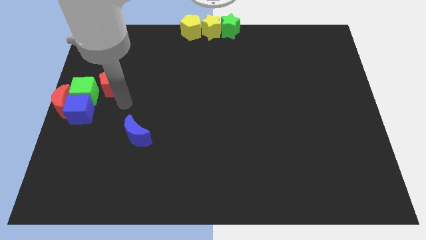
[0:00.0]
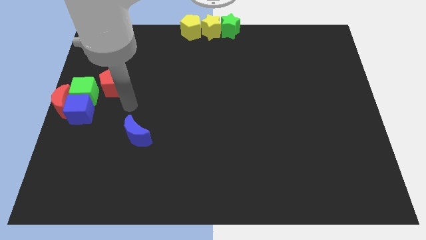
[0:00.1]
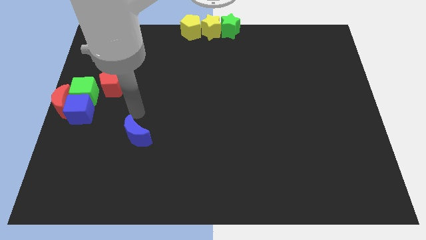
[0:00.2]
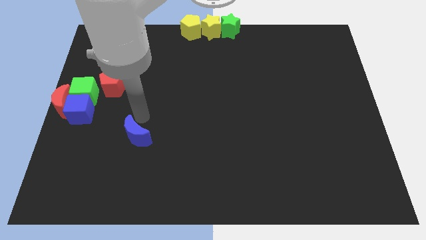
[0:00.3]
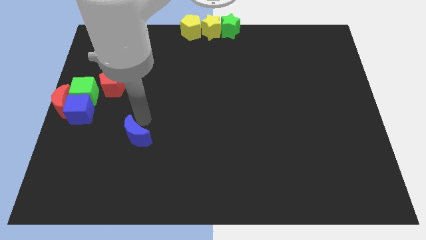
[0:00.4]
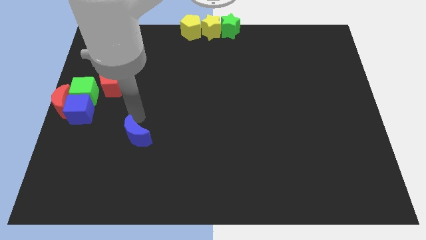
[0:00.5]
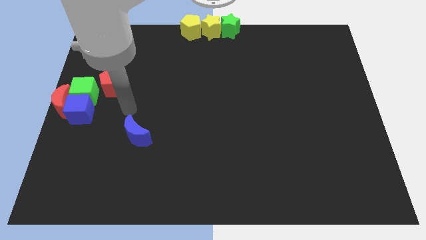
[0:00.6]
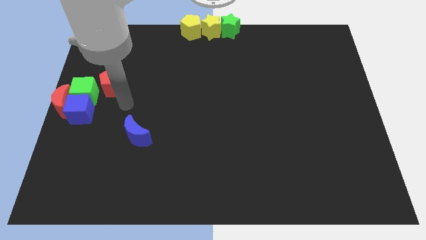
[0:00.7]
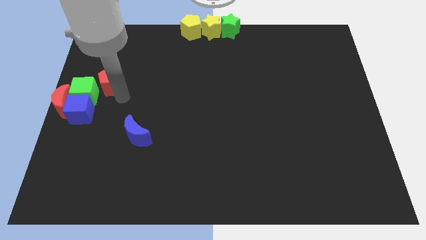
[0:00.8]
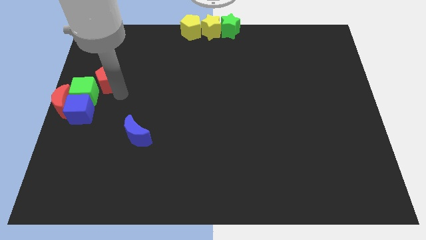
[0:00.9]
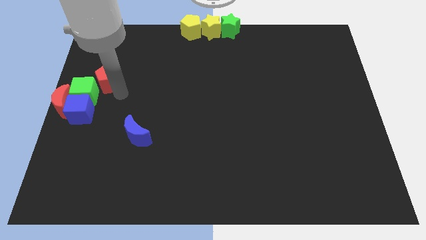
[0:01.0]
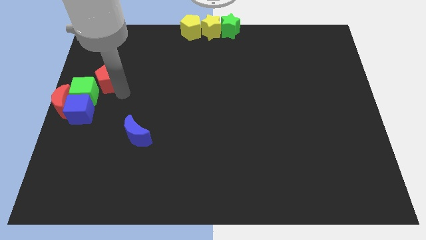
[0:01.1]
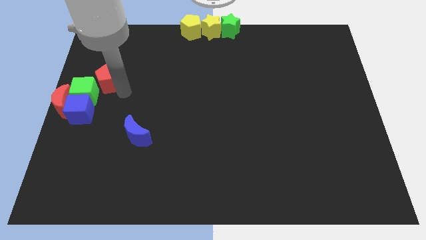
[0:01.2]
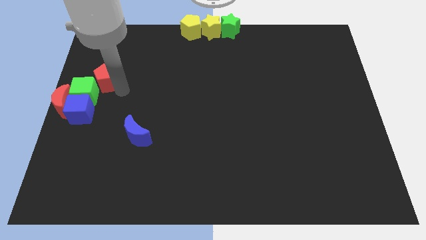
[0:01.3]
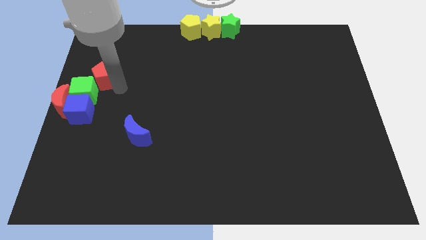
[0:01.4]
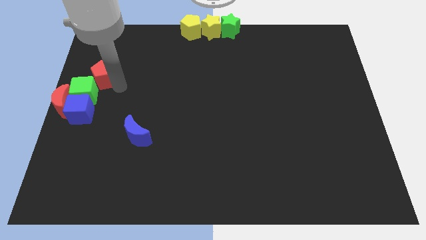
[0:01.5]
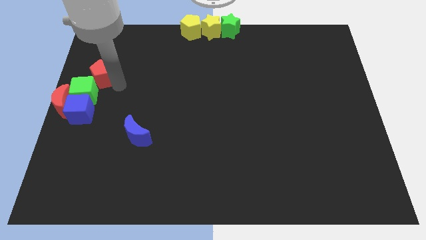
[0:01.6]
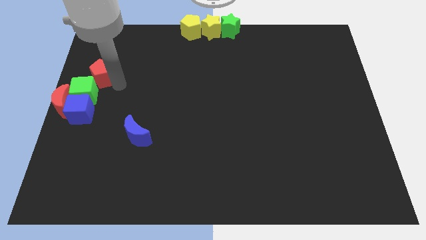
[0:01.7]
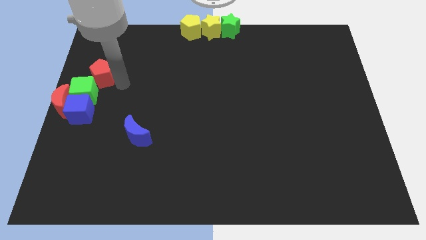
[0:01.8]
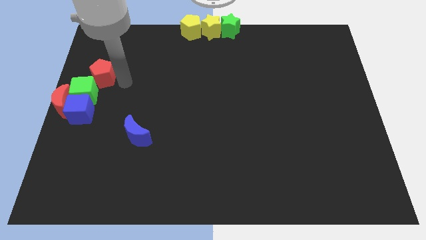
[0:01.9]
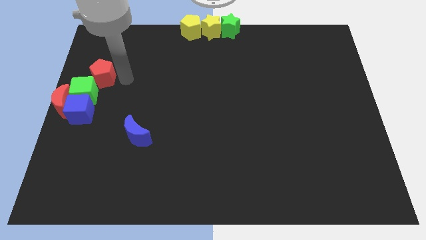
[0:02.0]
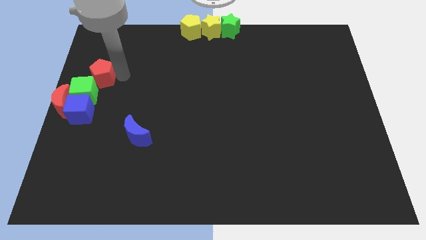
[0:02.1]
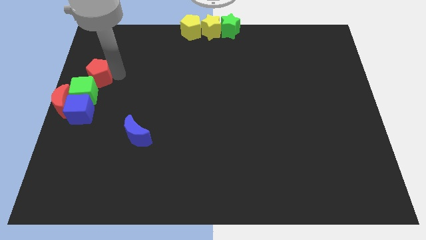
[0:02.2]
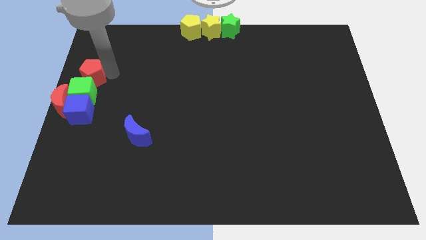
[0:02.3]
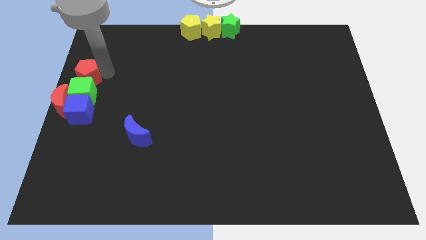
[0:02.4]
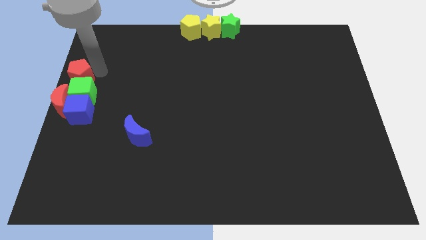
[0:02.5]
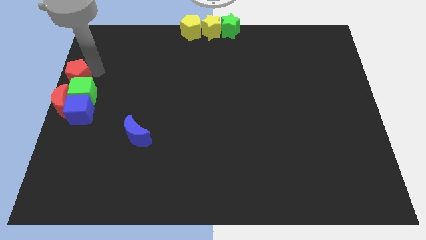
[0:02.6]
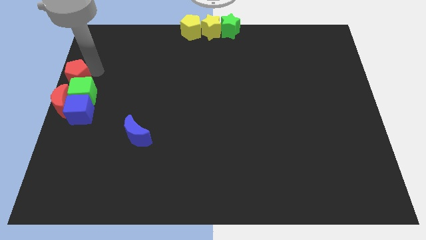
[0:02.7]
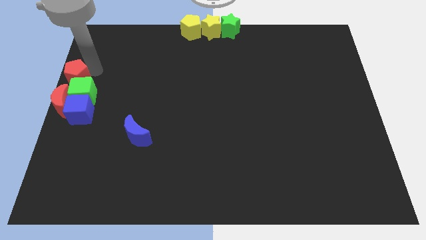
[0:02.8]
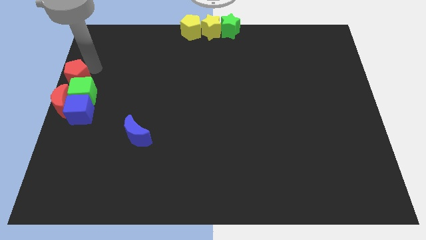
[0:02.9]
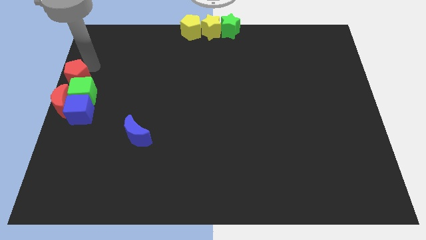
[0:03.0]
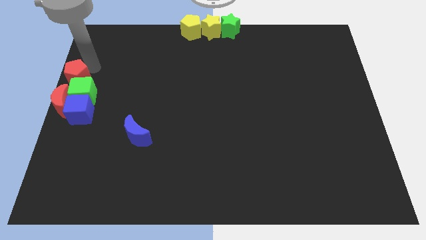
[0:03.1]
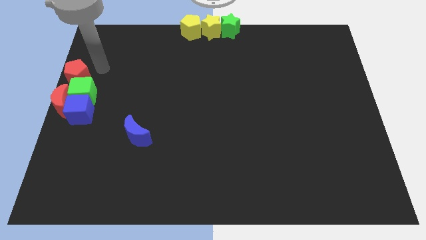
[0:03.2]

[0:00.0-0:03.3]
move the red pentagon towards the green cube

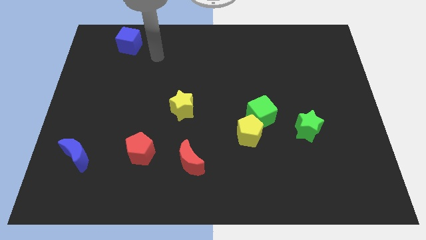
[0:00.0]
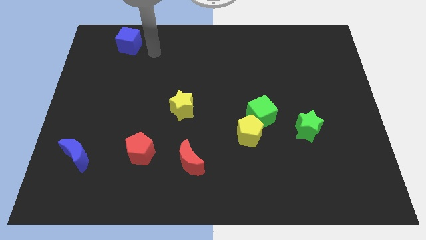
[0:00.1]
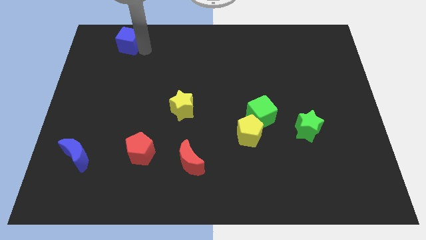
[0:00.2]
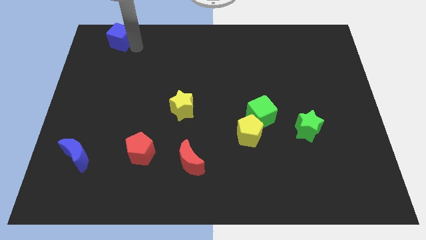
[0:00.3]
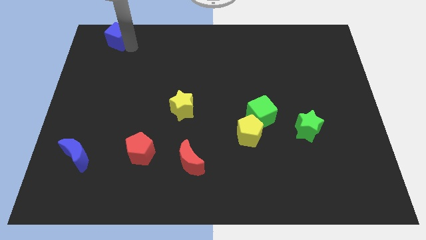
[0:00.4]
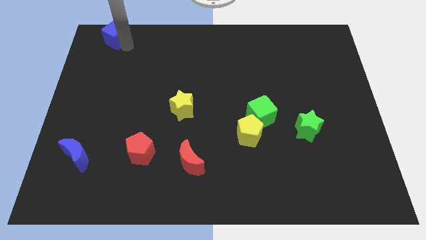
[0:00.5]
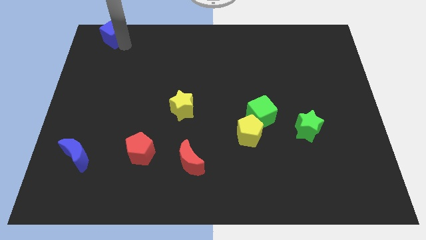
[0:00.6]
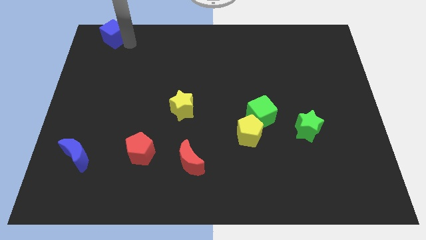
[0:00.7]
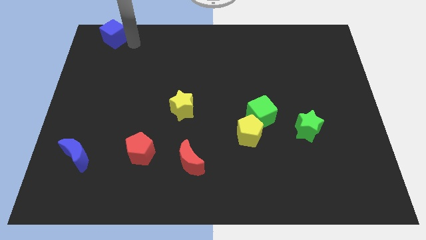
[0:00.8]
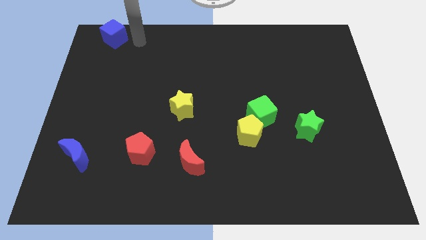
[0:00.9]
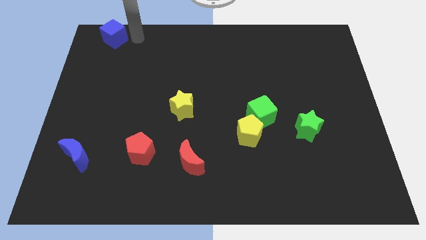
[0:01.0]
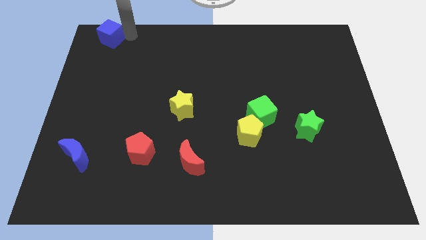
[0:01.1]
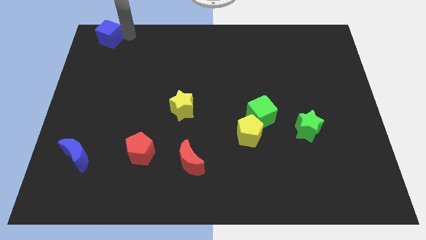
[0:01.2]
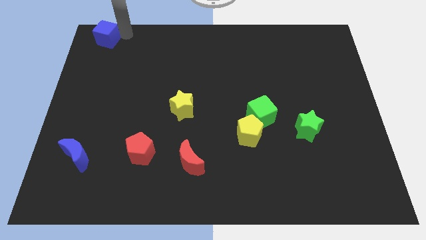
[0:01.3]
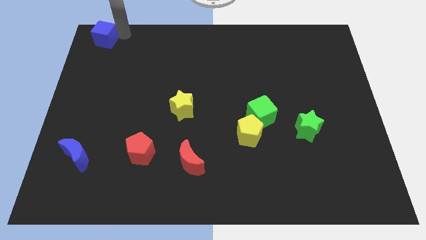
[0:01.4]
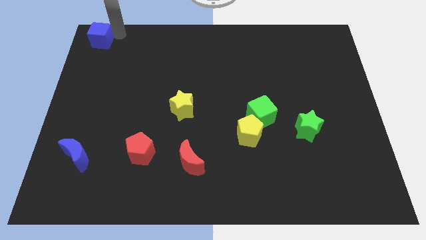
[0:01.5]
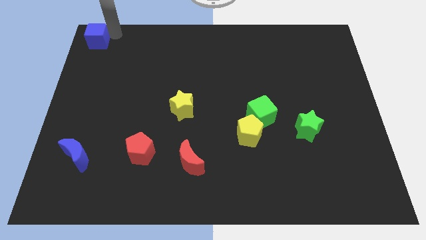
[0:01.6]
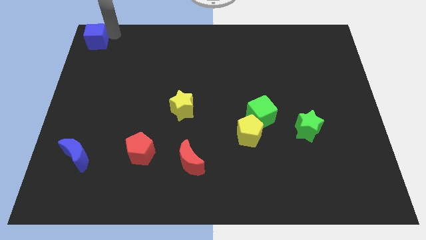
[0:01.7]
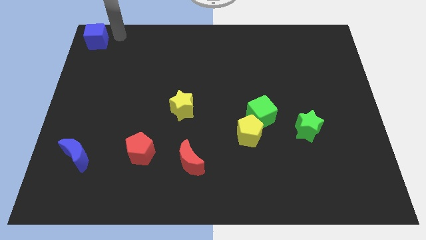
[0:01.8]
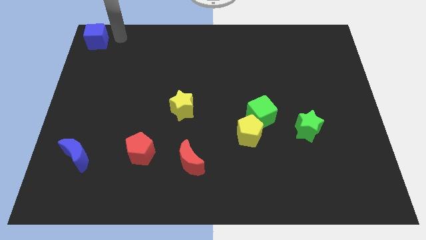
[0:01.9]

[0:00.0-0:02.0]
push the blue cube towards the top left corner of the board

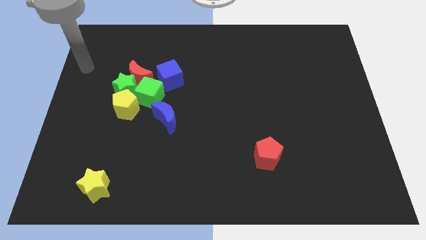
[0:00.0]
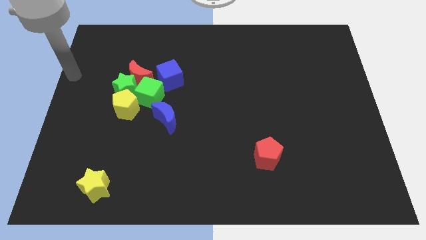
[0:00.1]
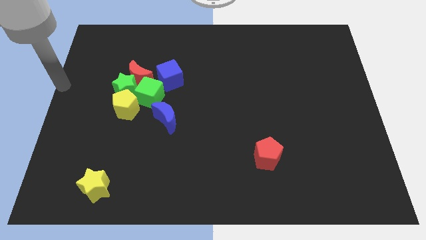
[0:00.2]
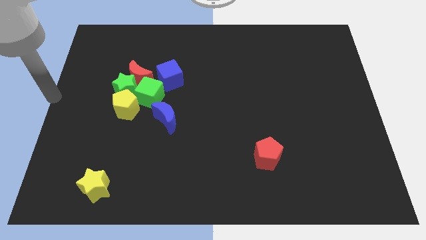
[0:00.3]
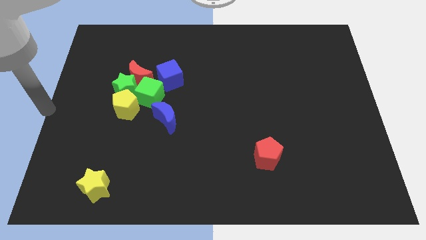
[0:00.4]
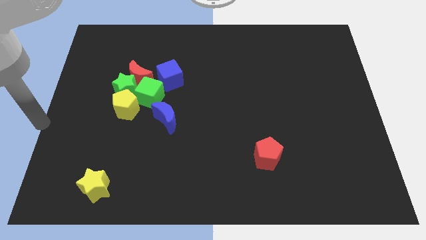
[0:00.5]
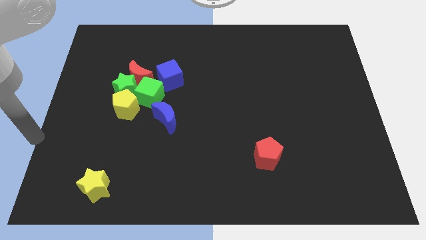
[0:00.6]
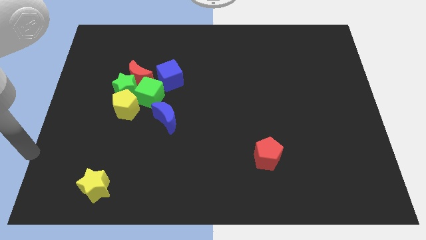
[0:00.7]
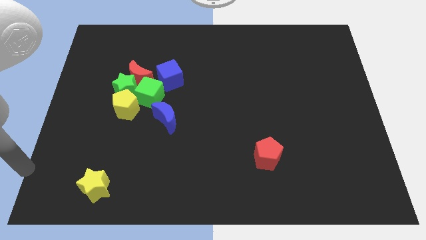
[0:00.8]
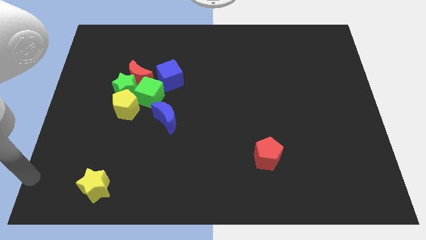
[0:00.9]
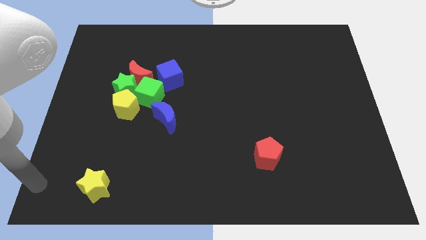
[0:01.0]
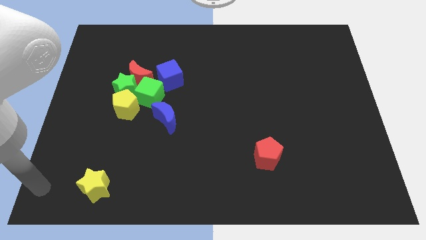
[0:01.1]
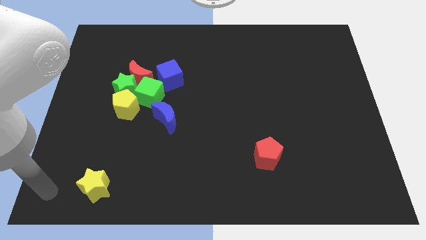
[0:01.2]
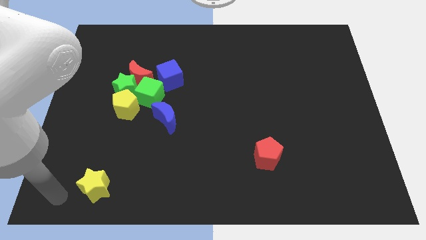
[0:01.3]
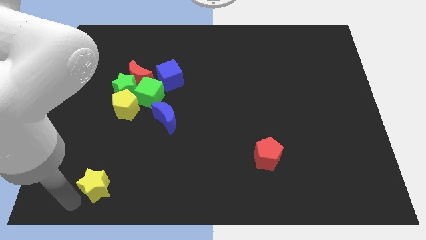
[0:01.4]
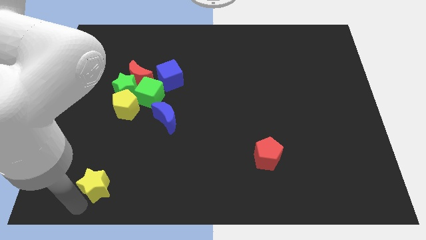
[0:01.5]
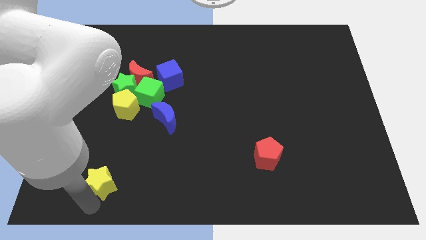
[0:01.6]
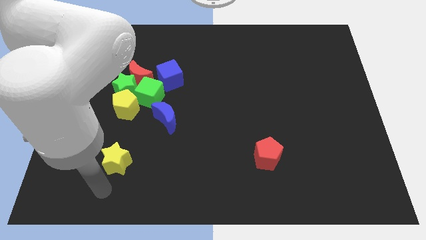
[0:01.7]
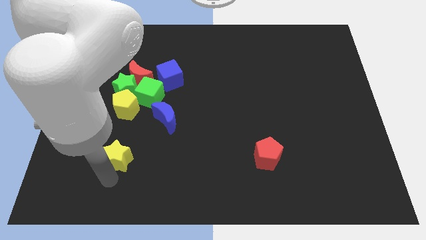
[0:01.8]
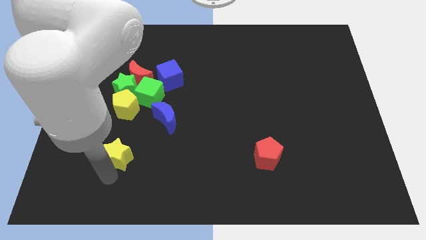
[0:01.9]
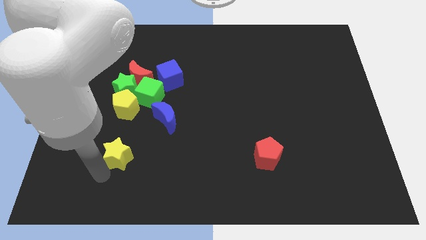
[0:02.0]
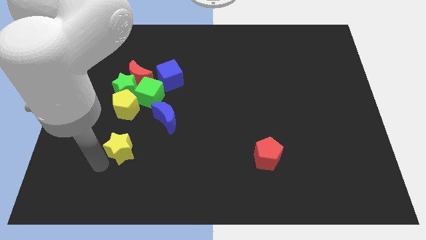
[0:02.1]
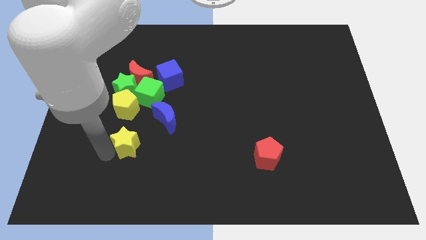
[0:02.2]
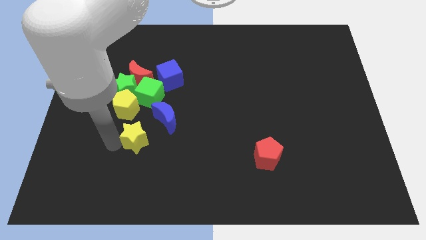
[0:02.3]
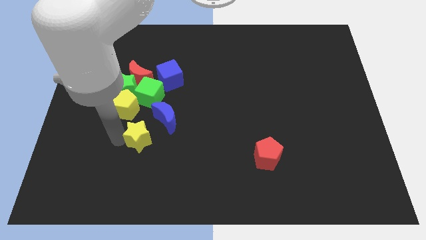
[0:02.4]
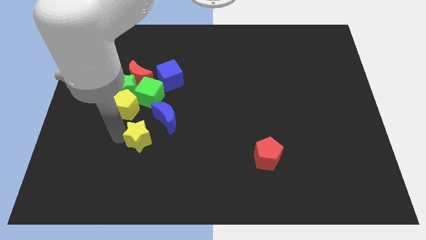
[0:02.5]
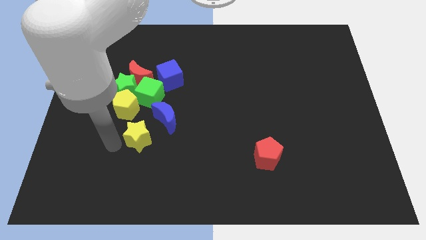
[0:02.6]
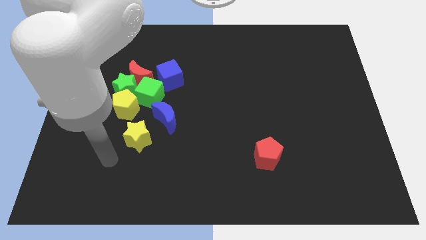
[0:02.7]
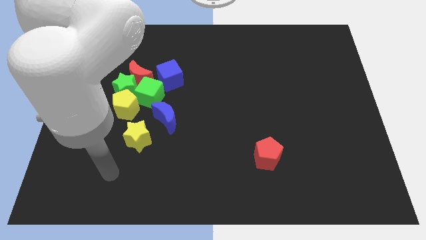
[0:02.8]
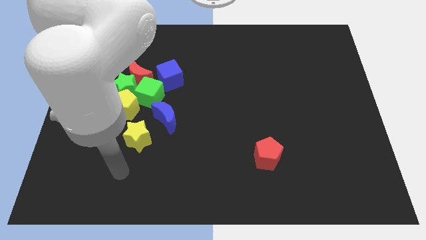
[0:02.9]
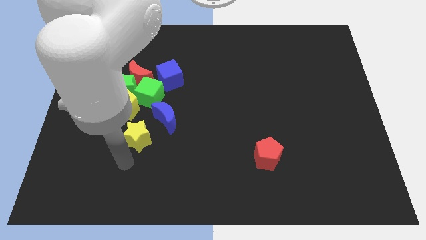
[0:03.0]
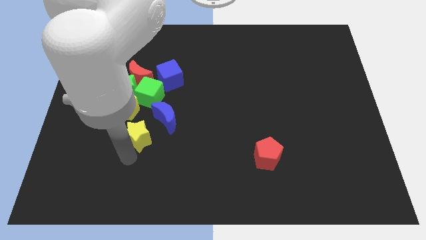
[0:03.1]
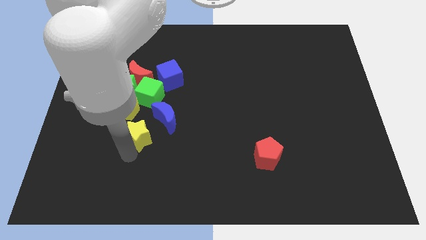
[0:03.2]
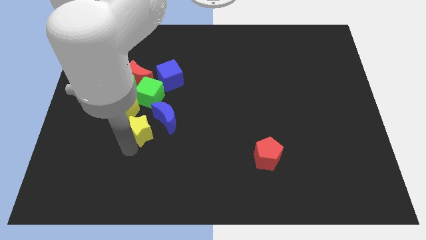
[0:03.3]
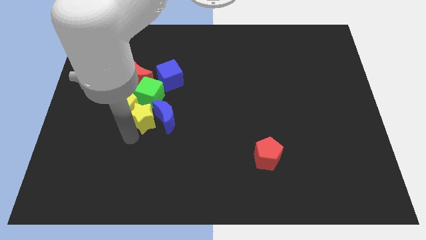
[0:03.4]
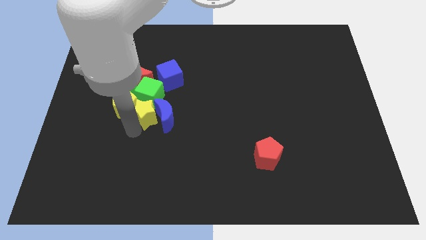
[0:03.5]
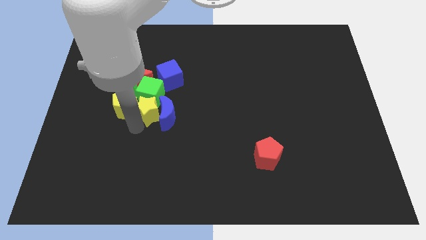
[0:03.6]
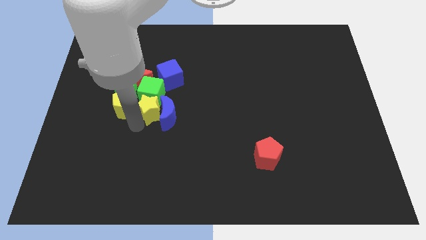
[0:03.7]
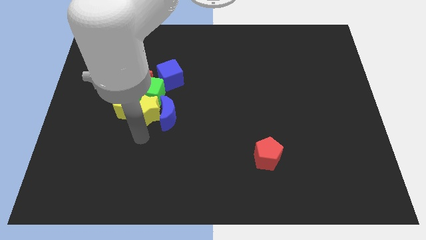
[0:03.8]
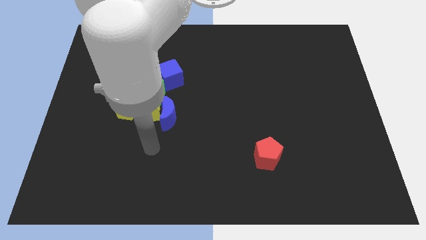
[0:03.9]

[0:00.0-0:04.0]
push the yellow star into the green cube
